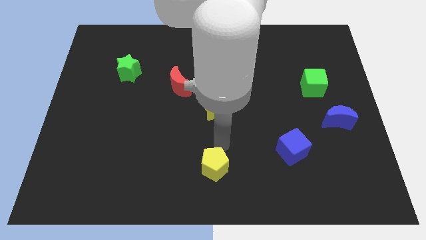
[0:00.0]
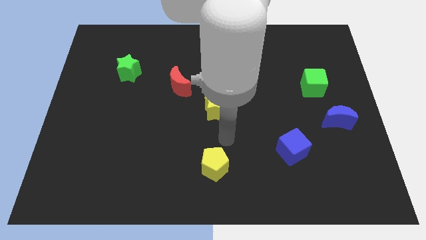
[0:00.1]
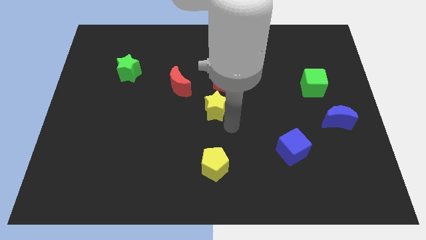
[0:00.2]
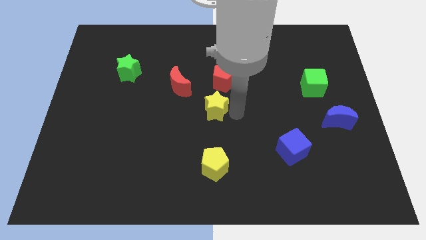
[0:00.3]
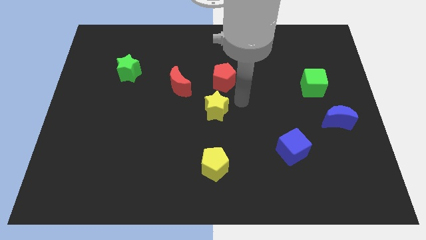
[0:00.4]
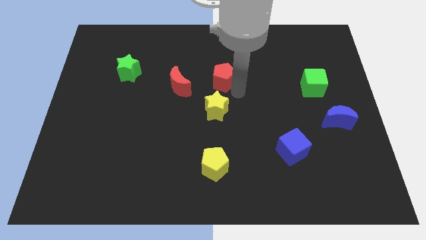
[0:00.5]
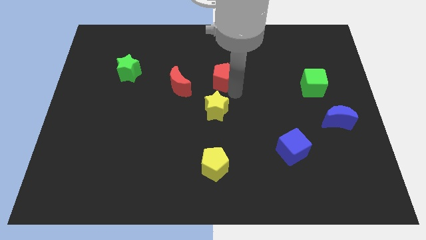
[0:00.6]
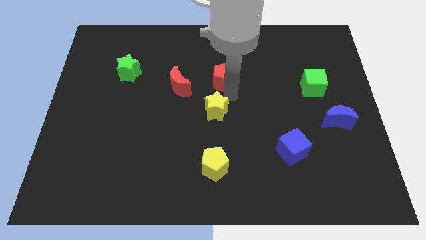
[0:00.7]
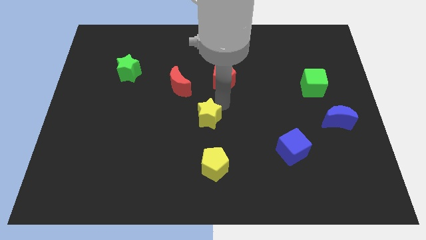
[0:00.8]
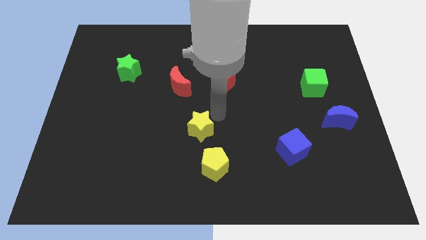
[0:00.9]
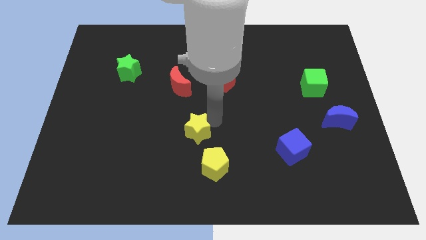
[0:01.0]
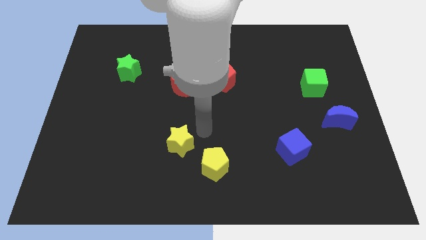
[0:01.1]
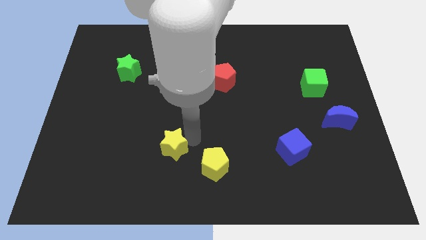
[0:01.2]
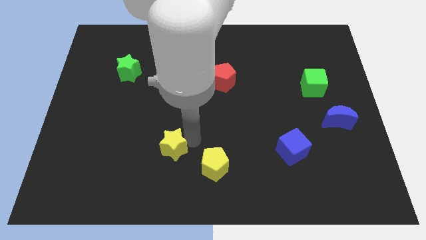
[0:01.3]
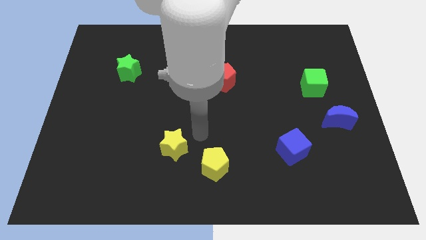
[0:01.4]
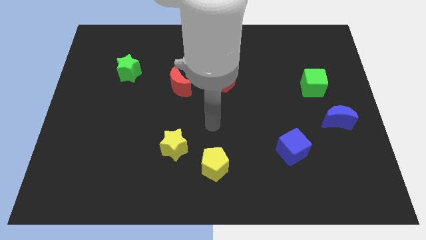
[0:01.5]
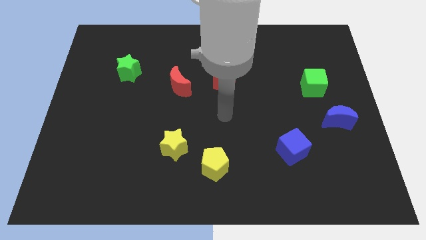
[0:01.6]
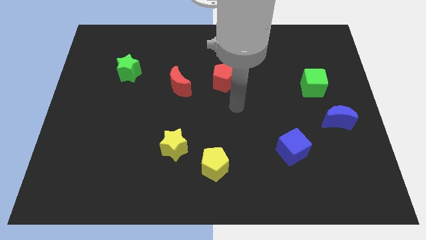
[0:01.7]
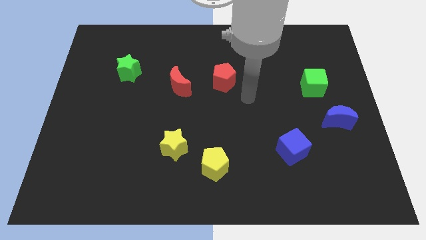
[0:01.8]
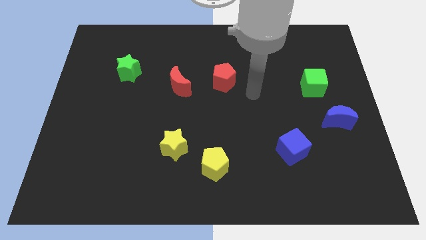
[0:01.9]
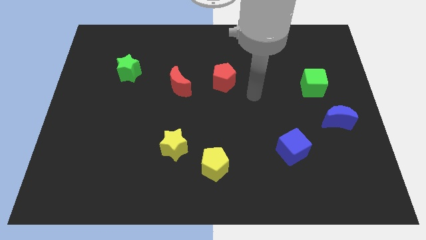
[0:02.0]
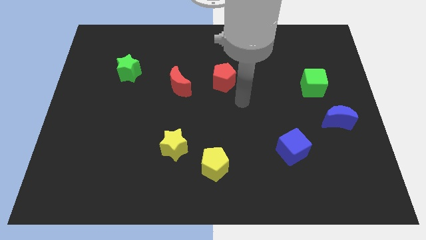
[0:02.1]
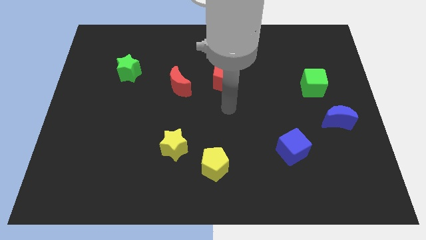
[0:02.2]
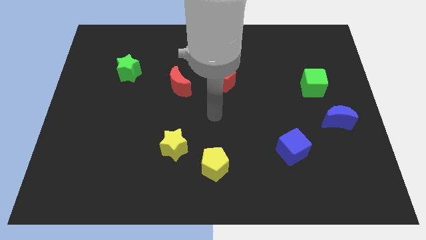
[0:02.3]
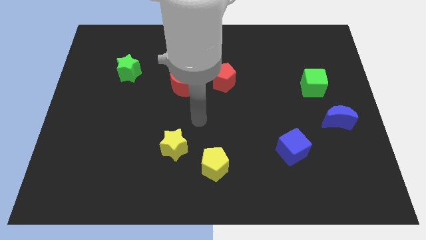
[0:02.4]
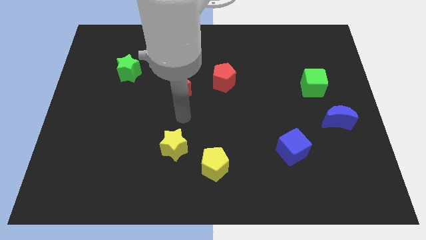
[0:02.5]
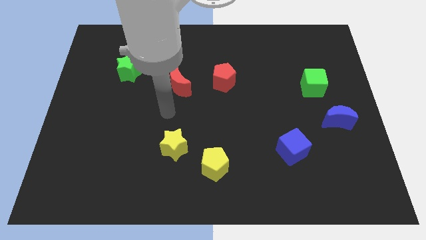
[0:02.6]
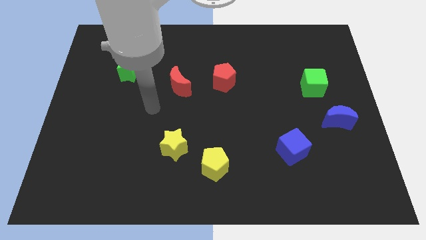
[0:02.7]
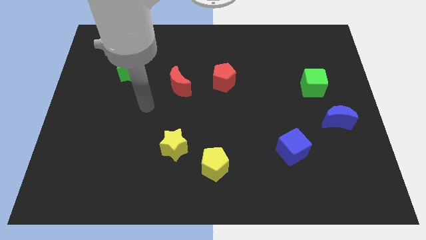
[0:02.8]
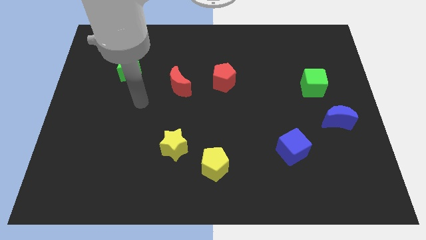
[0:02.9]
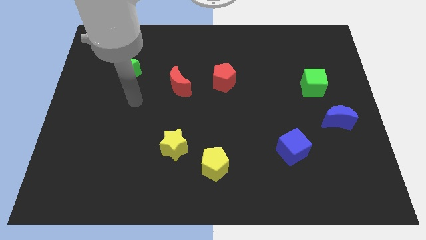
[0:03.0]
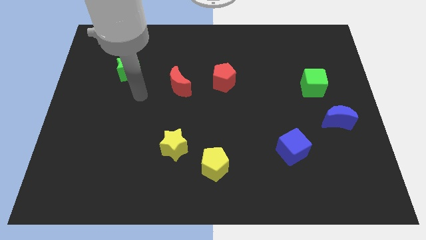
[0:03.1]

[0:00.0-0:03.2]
place the yellow star at the bottom of the red crescent

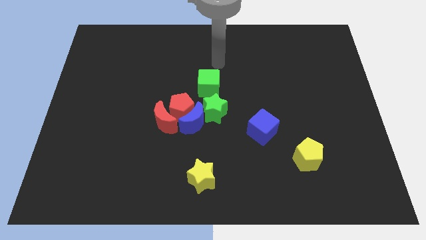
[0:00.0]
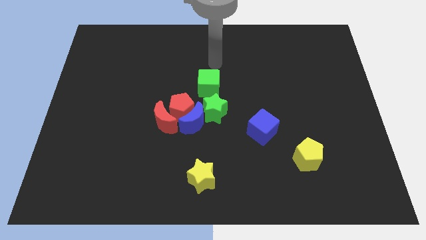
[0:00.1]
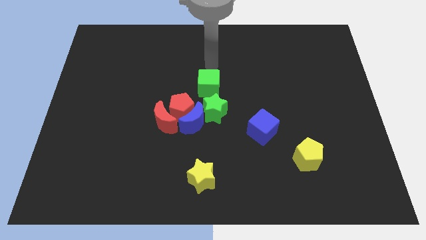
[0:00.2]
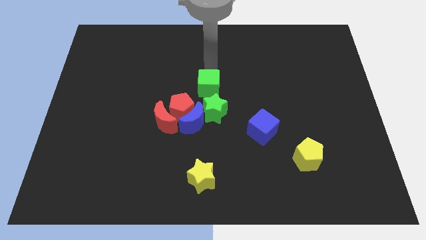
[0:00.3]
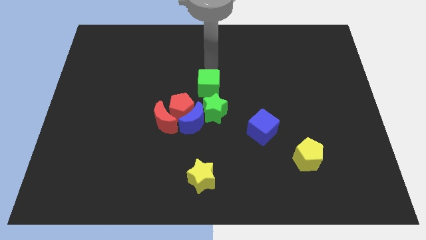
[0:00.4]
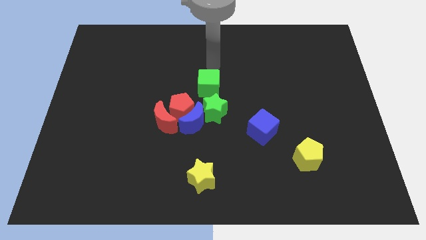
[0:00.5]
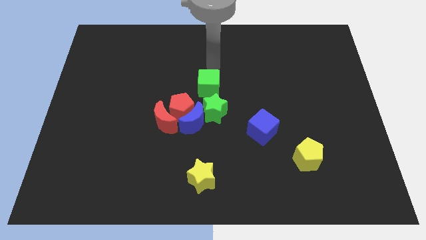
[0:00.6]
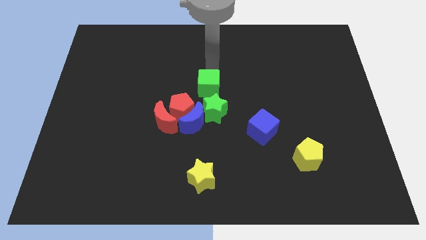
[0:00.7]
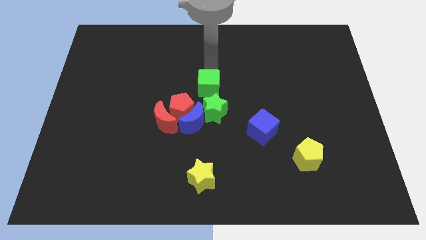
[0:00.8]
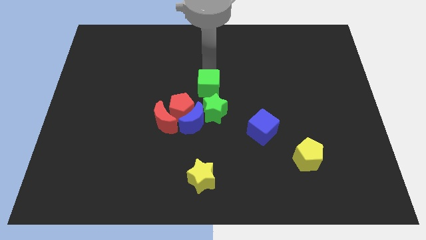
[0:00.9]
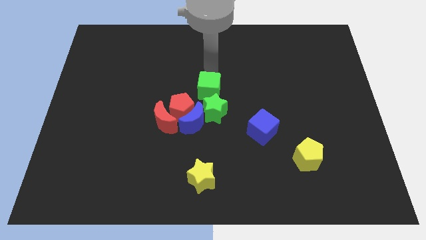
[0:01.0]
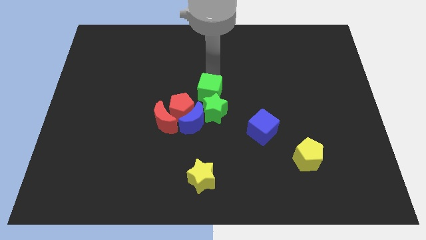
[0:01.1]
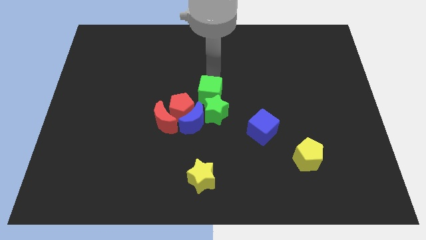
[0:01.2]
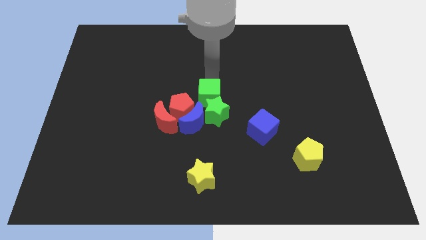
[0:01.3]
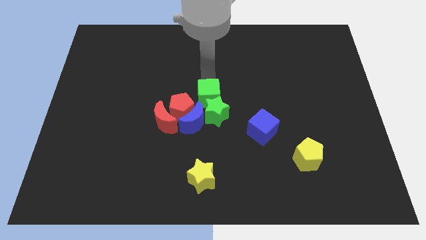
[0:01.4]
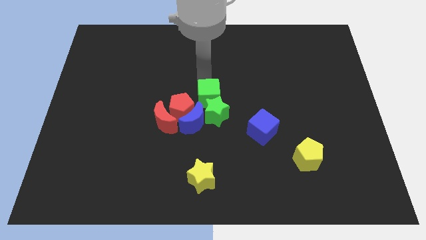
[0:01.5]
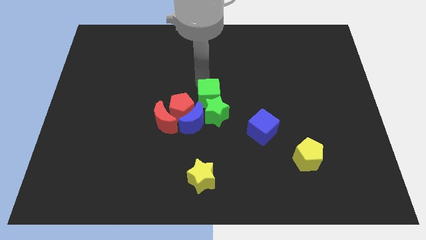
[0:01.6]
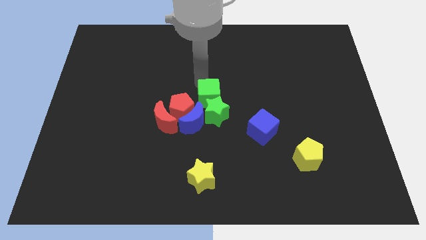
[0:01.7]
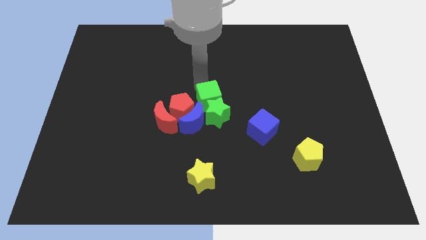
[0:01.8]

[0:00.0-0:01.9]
push the green cube into the top of the green star

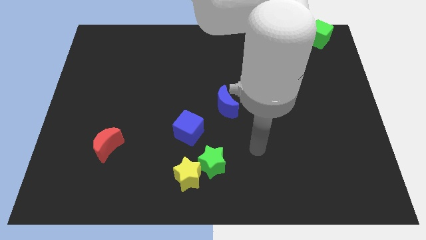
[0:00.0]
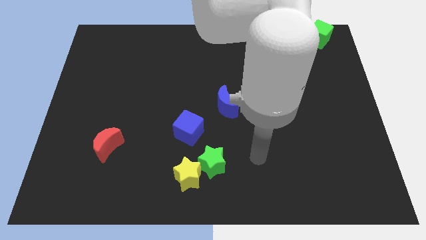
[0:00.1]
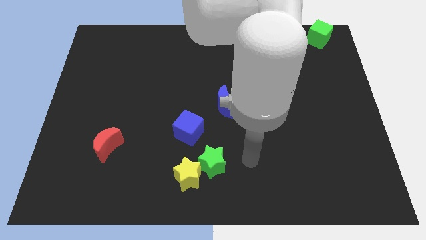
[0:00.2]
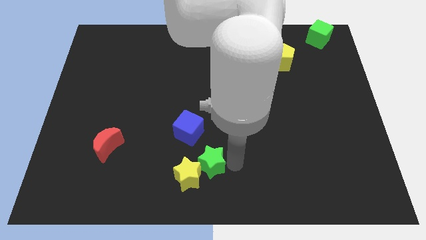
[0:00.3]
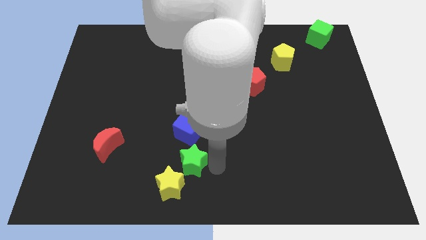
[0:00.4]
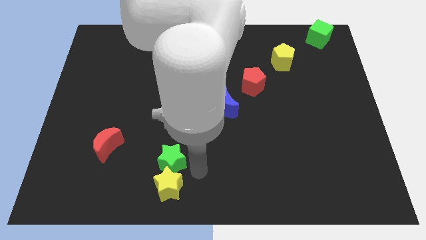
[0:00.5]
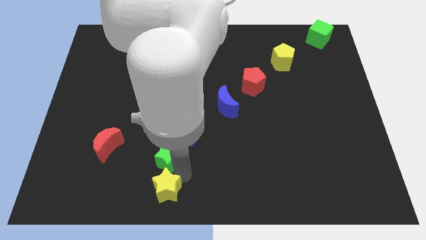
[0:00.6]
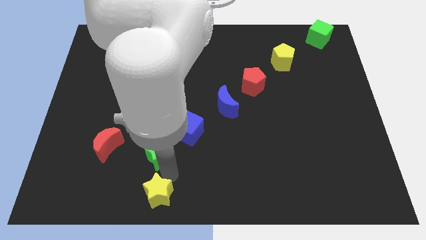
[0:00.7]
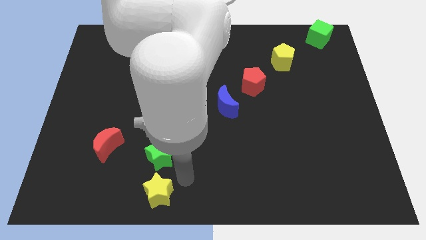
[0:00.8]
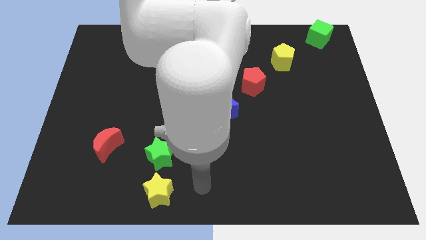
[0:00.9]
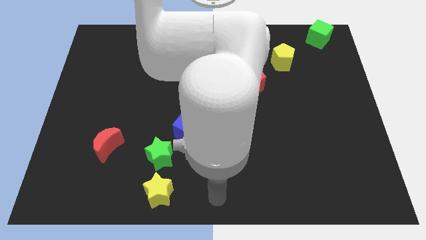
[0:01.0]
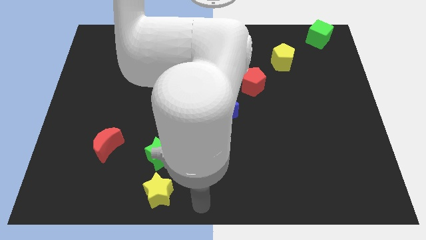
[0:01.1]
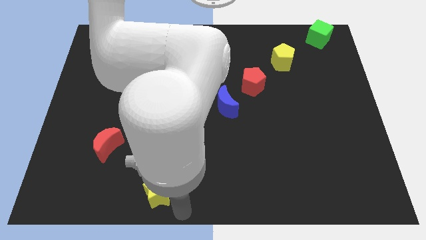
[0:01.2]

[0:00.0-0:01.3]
push yellow and green star to left of the board

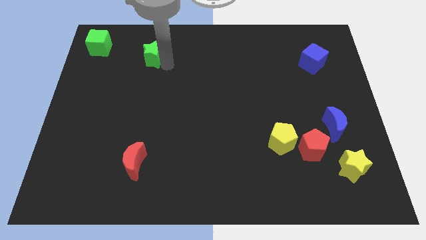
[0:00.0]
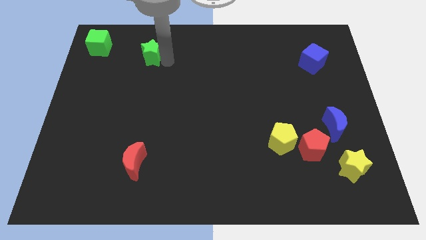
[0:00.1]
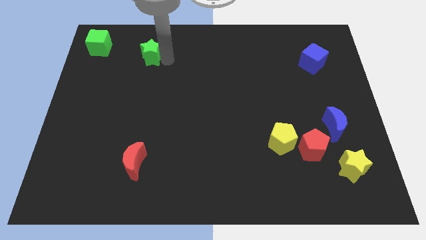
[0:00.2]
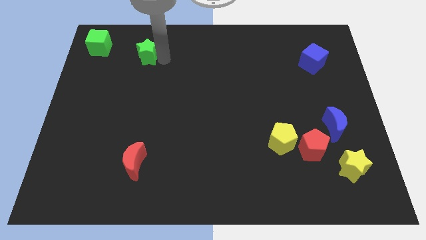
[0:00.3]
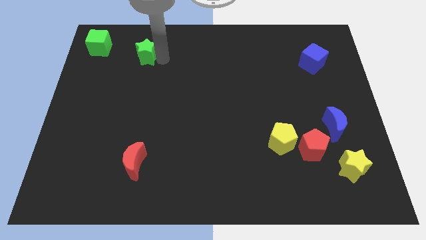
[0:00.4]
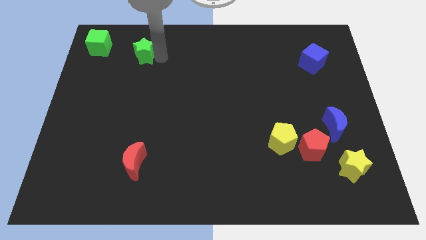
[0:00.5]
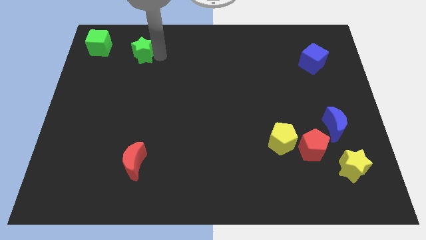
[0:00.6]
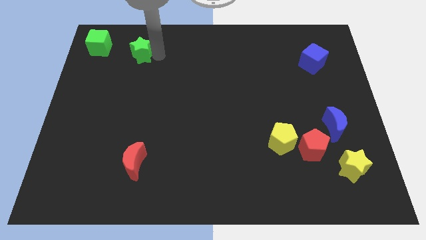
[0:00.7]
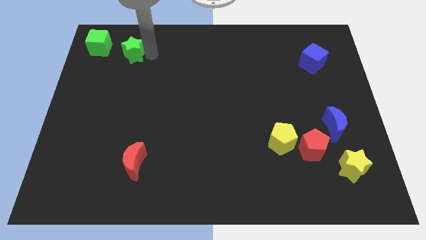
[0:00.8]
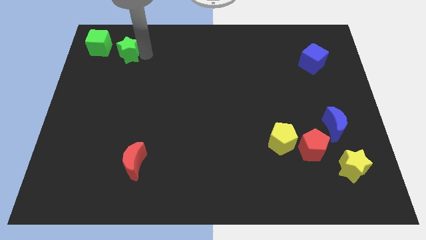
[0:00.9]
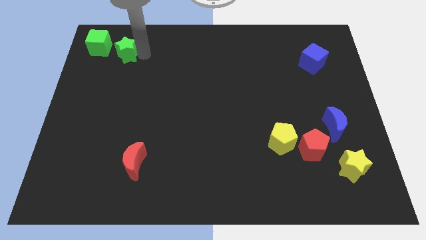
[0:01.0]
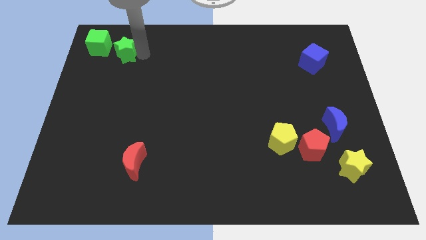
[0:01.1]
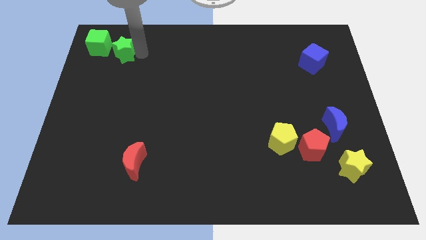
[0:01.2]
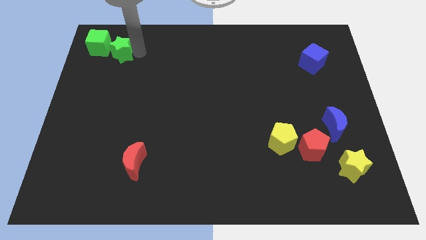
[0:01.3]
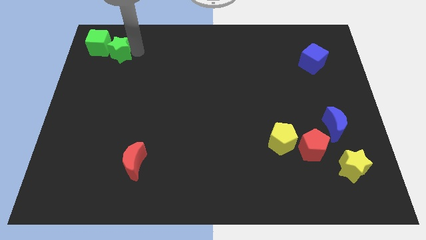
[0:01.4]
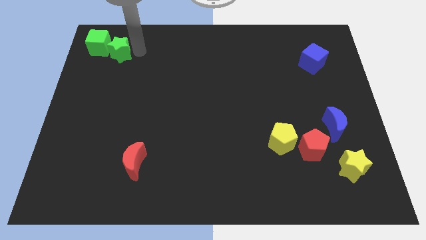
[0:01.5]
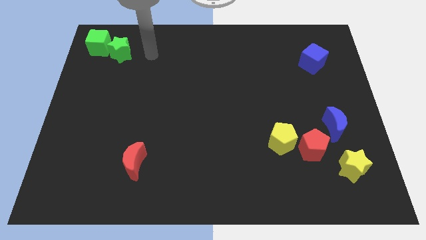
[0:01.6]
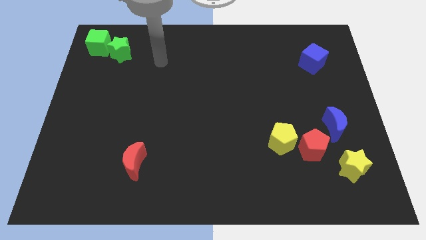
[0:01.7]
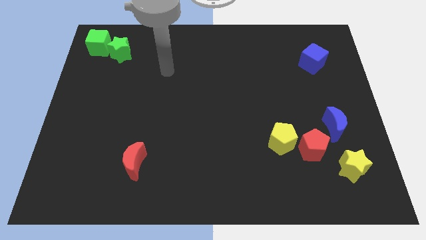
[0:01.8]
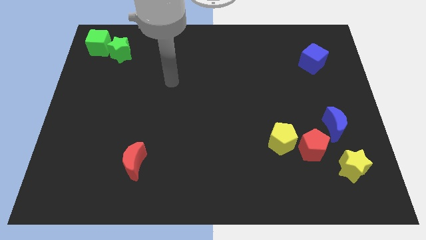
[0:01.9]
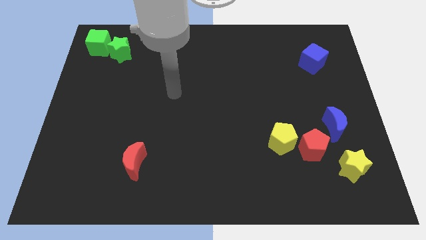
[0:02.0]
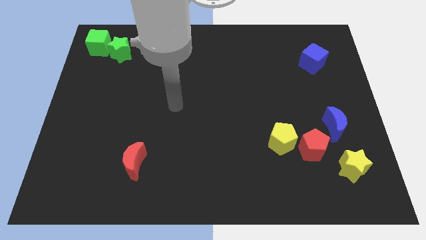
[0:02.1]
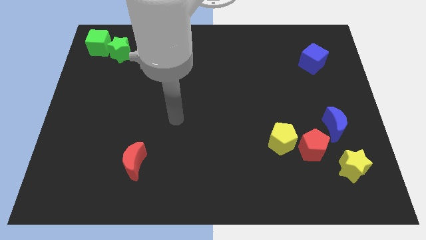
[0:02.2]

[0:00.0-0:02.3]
move the green star close to the green cube

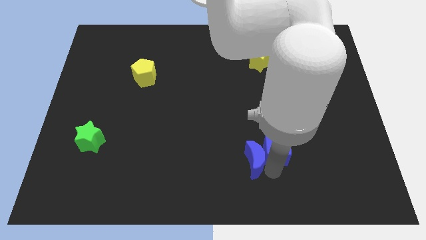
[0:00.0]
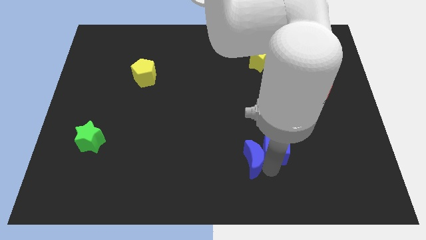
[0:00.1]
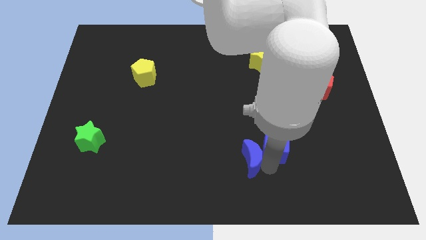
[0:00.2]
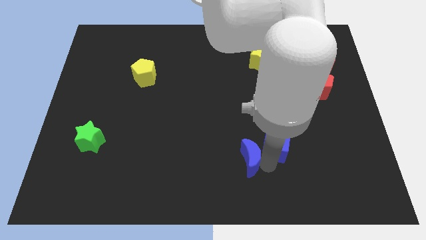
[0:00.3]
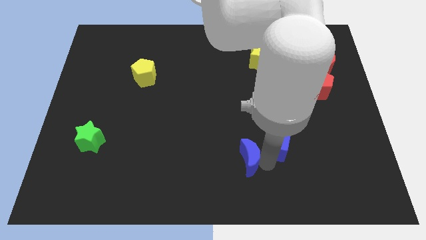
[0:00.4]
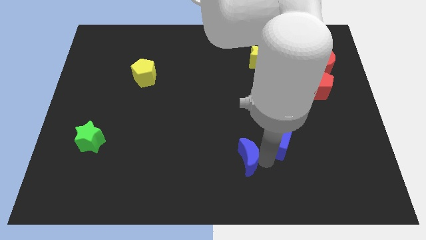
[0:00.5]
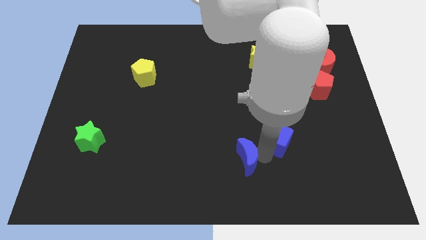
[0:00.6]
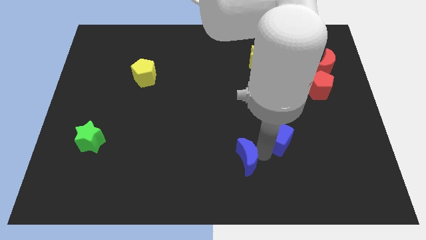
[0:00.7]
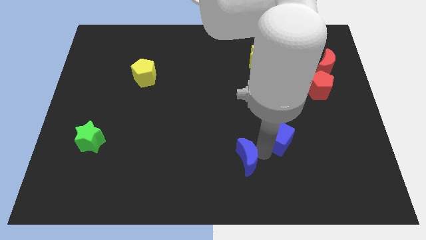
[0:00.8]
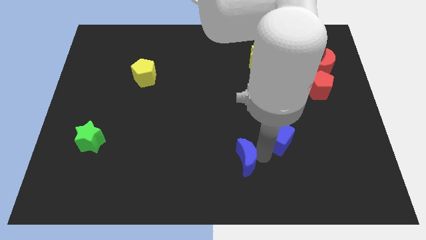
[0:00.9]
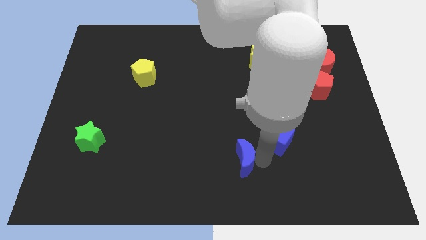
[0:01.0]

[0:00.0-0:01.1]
separate the blue crescent form blue cube
